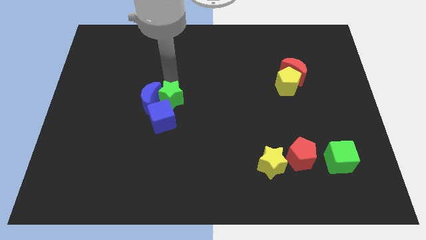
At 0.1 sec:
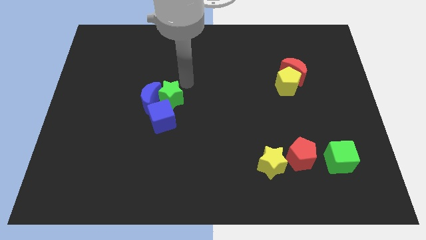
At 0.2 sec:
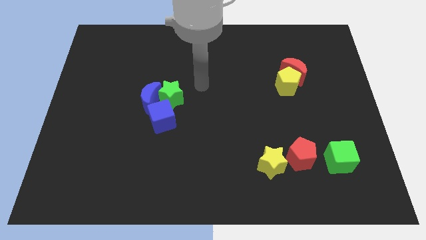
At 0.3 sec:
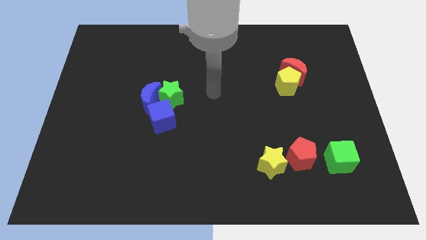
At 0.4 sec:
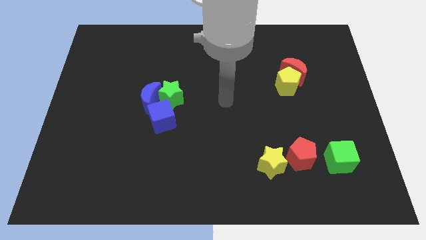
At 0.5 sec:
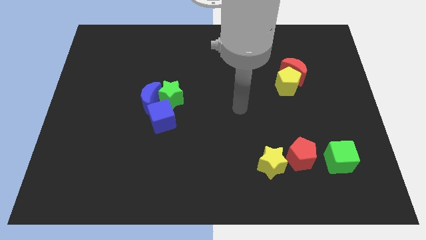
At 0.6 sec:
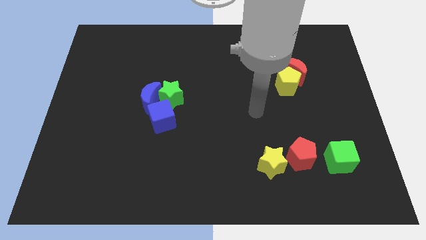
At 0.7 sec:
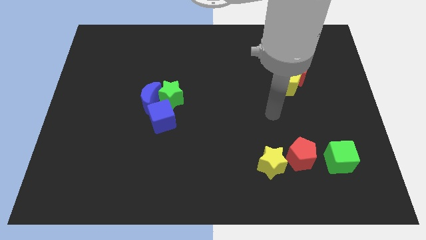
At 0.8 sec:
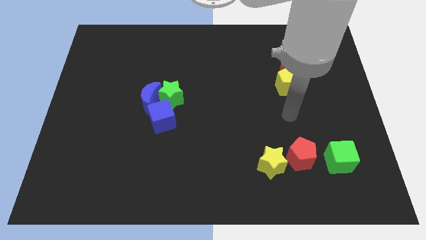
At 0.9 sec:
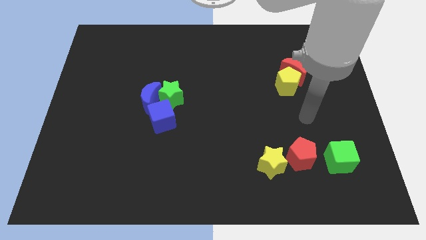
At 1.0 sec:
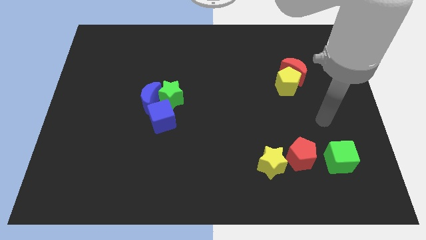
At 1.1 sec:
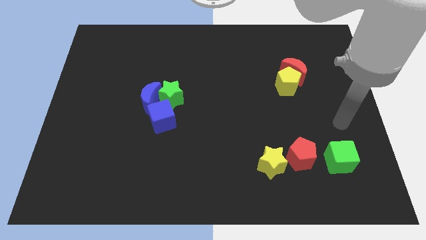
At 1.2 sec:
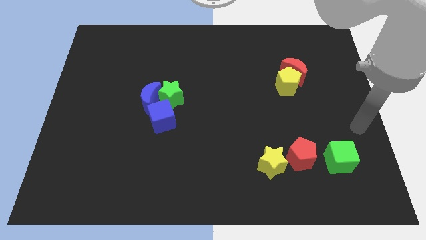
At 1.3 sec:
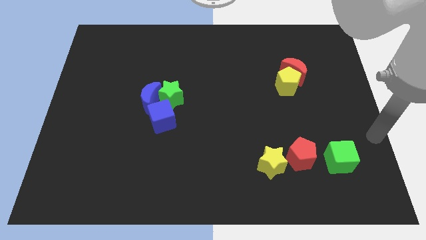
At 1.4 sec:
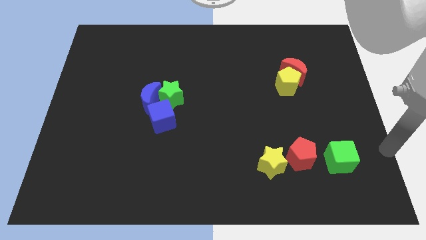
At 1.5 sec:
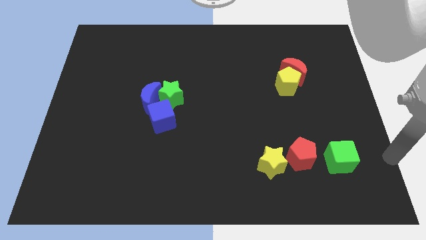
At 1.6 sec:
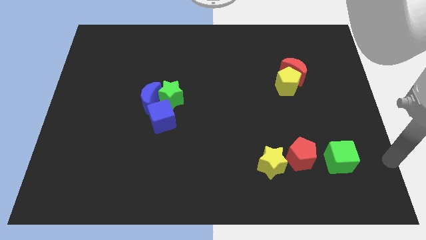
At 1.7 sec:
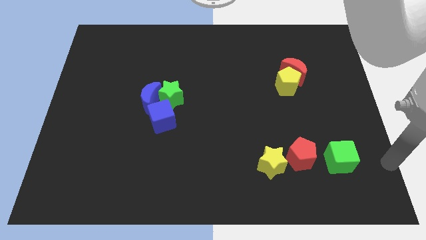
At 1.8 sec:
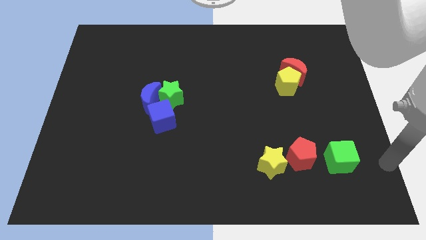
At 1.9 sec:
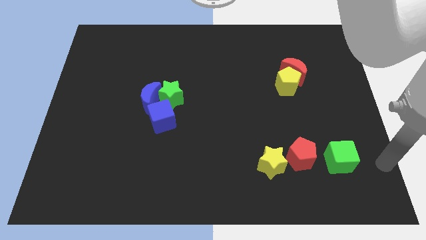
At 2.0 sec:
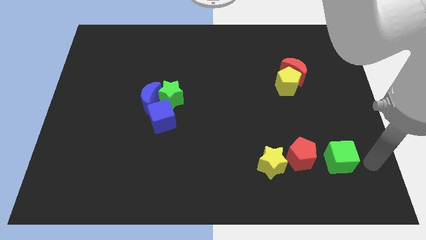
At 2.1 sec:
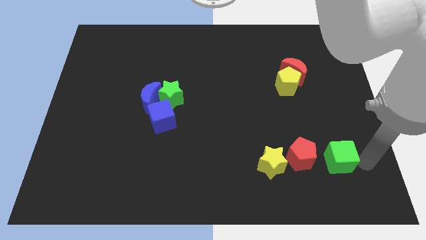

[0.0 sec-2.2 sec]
move arm to the right of the green cube

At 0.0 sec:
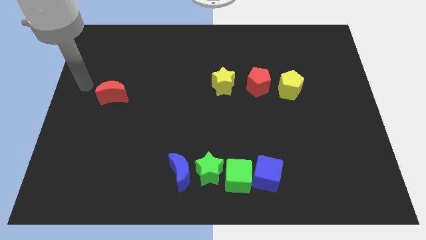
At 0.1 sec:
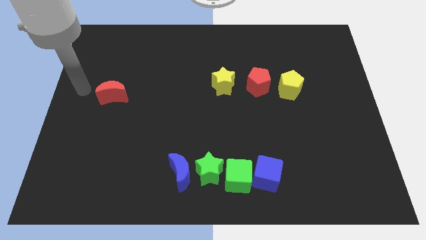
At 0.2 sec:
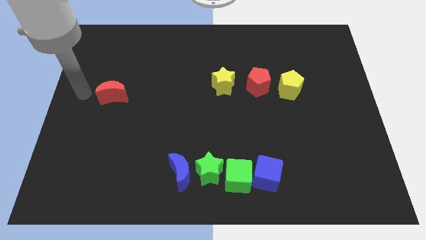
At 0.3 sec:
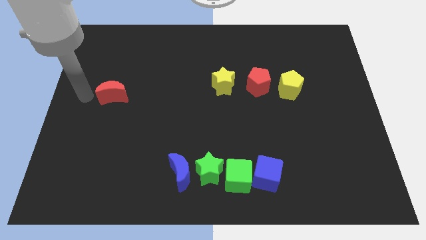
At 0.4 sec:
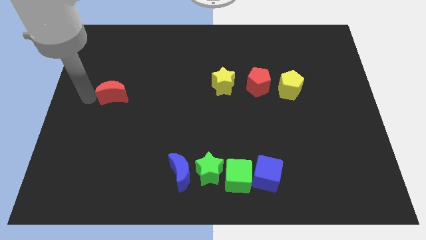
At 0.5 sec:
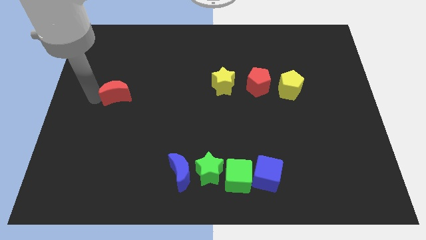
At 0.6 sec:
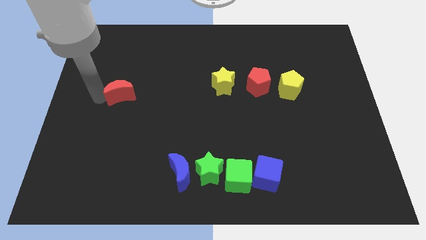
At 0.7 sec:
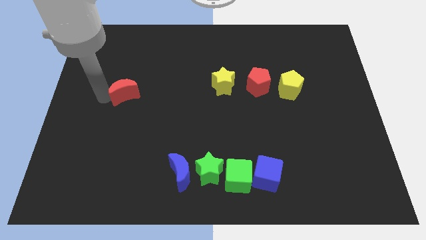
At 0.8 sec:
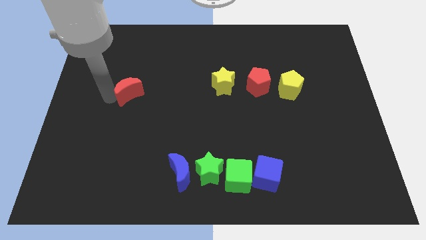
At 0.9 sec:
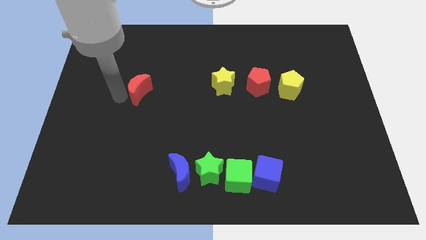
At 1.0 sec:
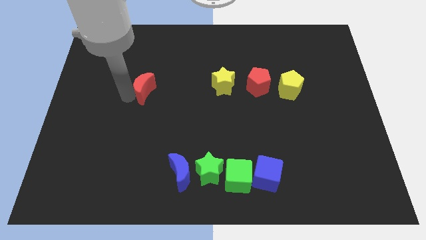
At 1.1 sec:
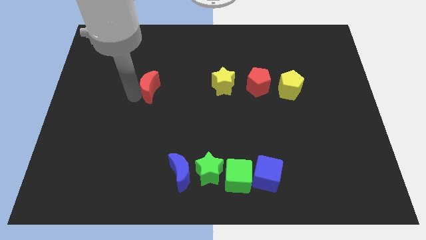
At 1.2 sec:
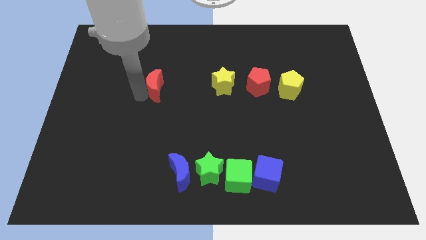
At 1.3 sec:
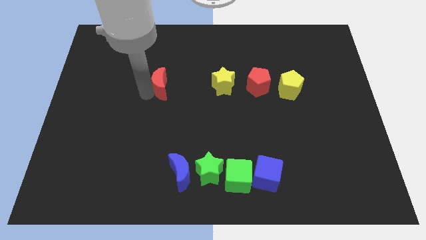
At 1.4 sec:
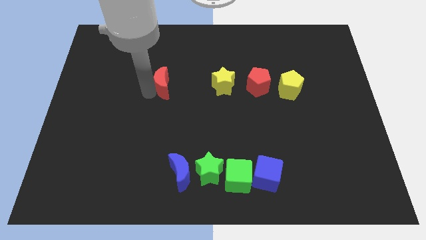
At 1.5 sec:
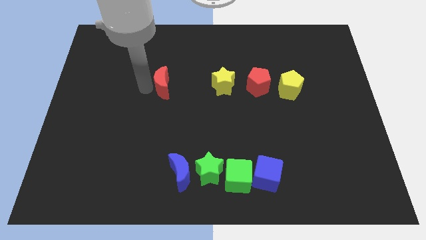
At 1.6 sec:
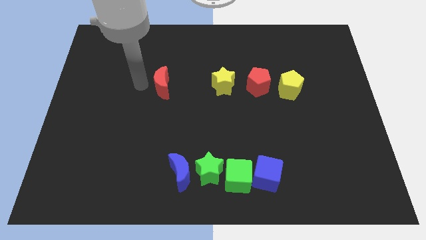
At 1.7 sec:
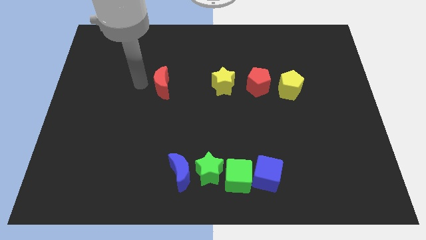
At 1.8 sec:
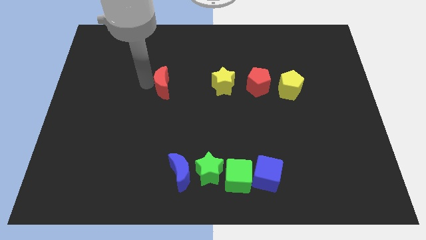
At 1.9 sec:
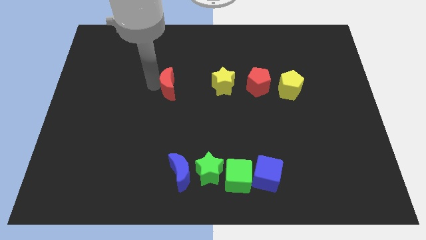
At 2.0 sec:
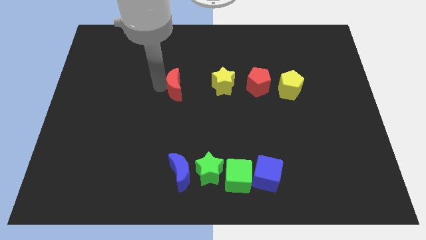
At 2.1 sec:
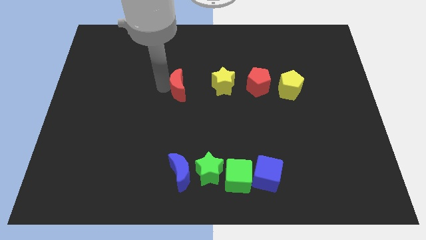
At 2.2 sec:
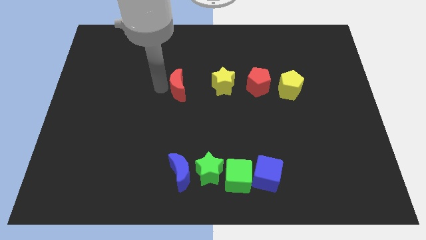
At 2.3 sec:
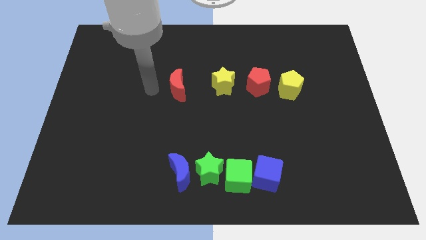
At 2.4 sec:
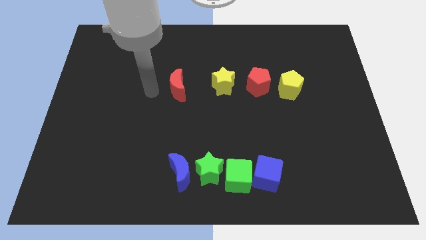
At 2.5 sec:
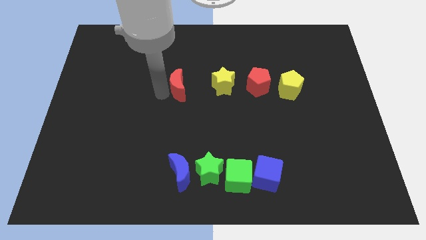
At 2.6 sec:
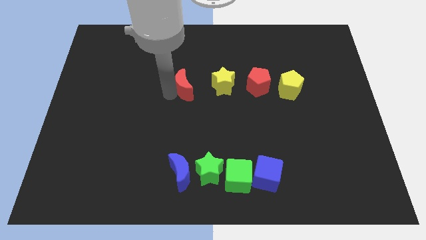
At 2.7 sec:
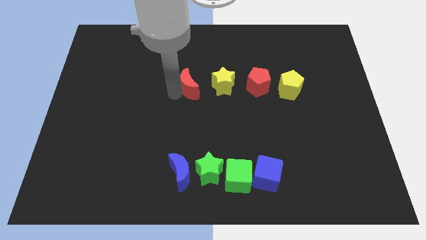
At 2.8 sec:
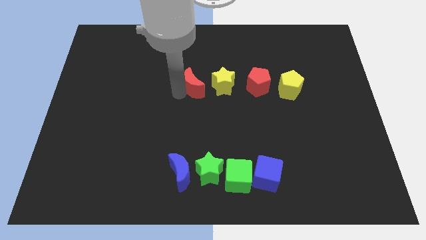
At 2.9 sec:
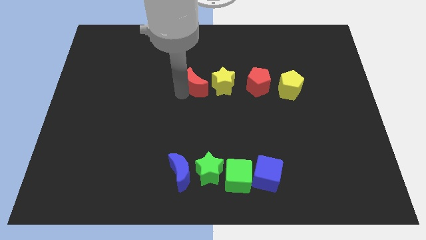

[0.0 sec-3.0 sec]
move the red moon to the left of yellow star

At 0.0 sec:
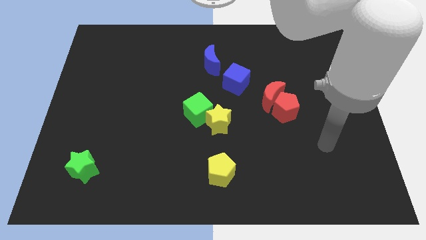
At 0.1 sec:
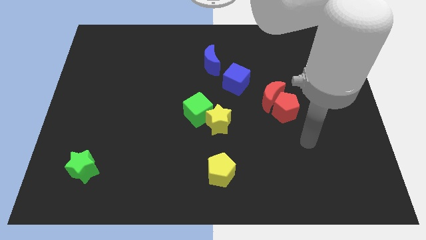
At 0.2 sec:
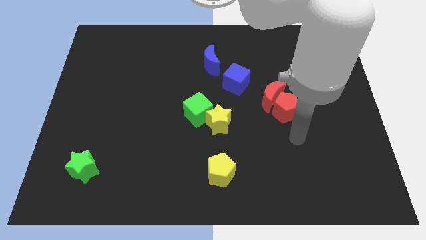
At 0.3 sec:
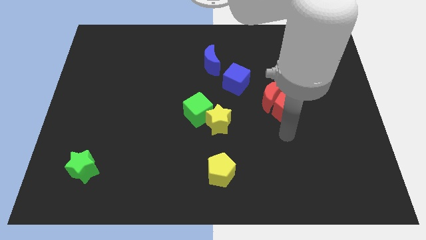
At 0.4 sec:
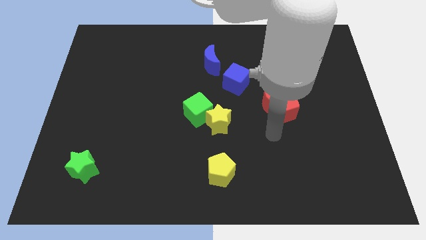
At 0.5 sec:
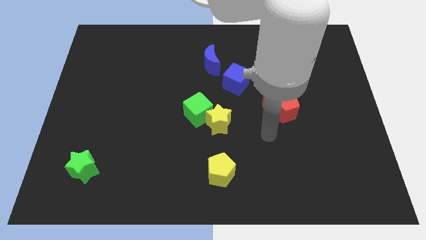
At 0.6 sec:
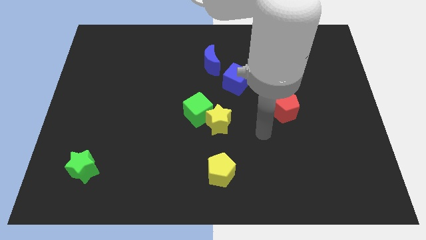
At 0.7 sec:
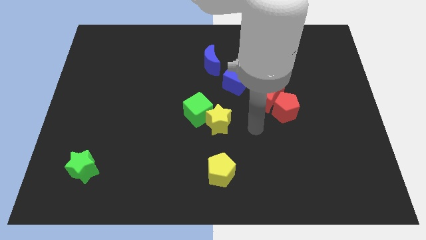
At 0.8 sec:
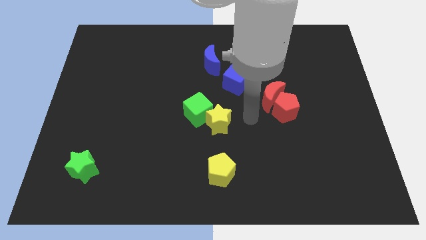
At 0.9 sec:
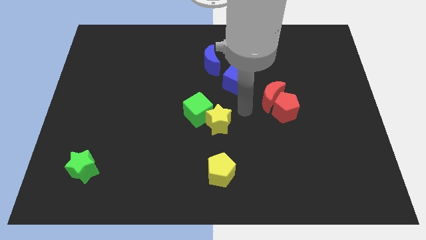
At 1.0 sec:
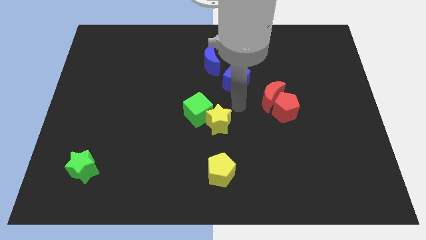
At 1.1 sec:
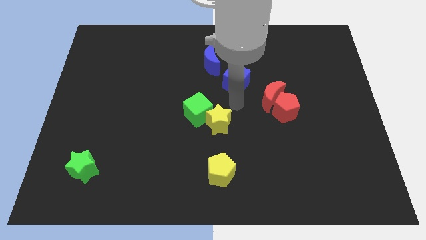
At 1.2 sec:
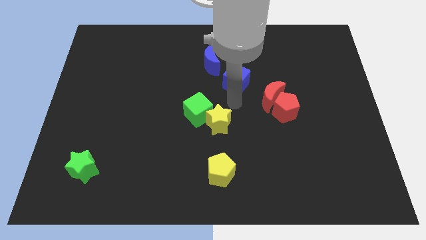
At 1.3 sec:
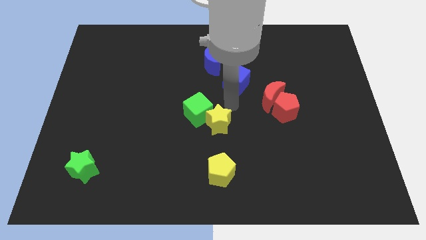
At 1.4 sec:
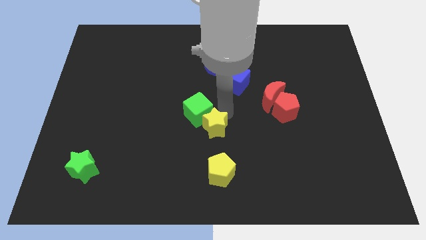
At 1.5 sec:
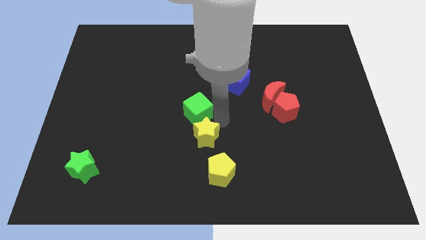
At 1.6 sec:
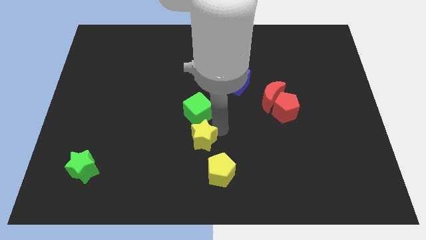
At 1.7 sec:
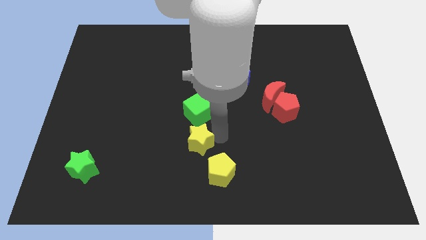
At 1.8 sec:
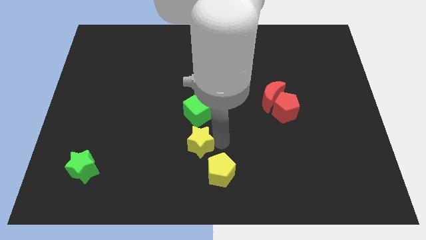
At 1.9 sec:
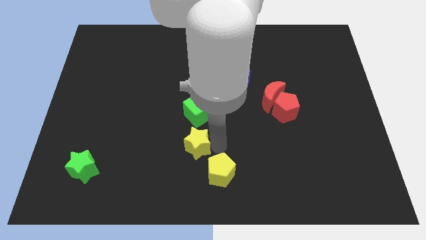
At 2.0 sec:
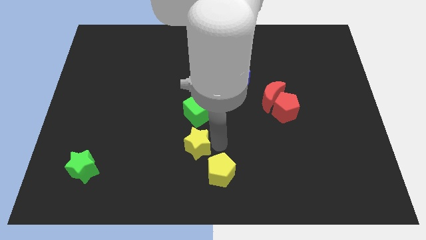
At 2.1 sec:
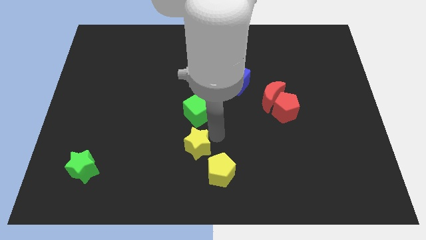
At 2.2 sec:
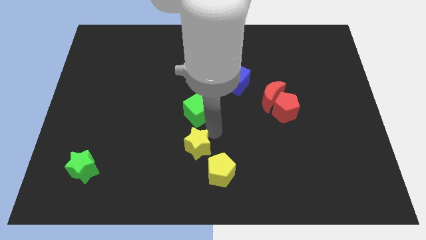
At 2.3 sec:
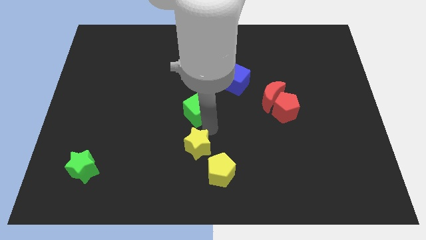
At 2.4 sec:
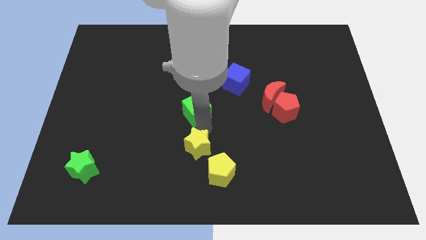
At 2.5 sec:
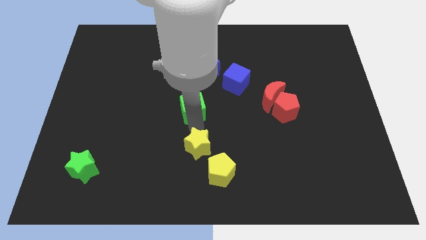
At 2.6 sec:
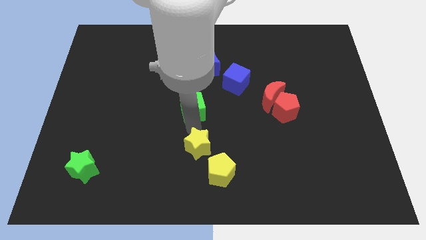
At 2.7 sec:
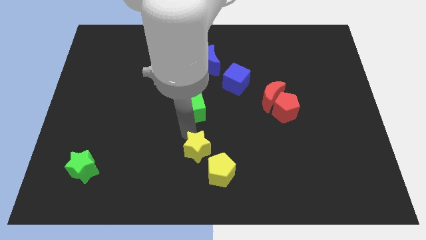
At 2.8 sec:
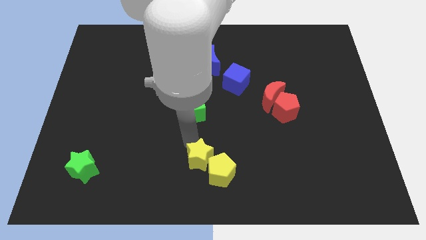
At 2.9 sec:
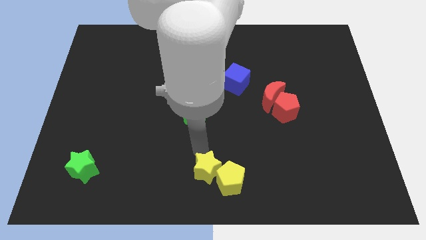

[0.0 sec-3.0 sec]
place the yellow star horizontally right to the green star

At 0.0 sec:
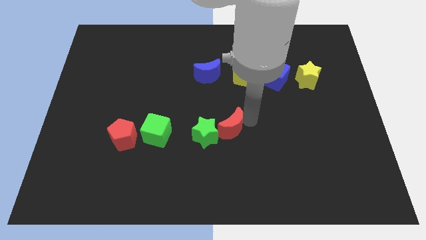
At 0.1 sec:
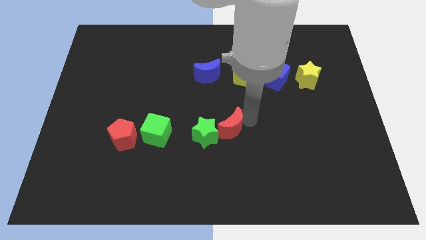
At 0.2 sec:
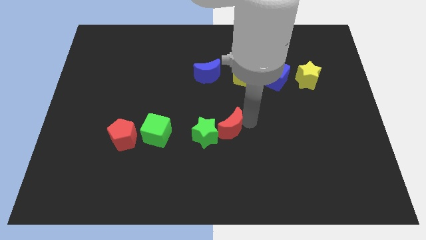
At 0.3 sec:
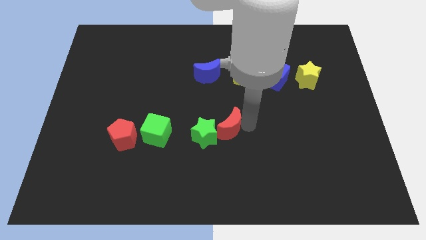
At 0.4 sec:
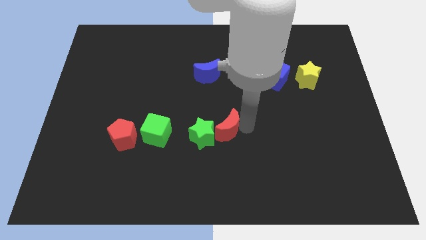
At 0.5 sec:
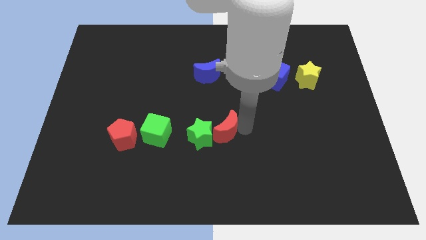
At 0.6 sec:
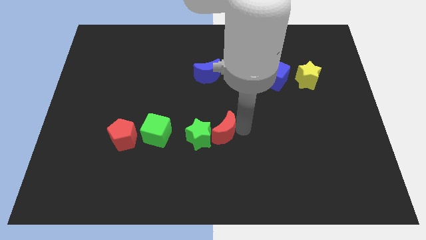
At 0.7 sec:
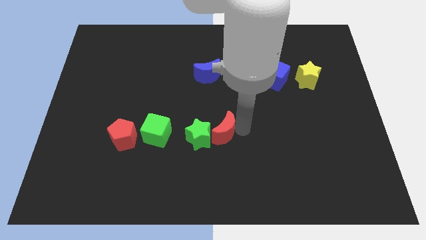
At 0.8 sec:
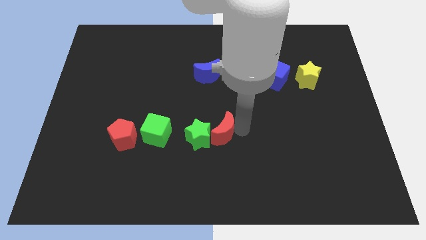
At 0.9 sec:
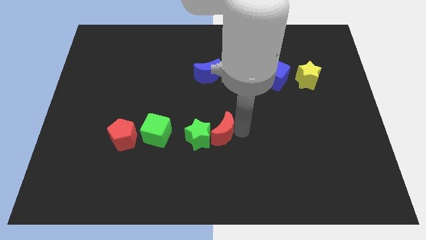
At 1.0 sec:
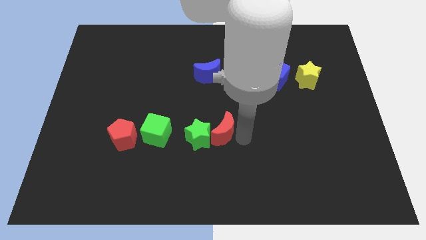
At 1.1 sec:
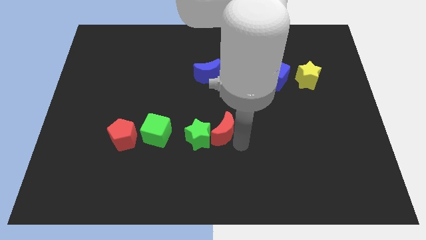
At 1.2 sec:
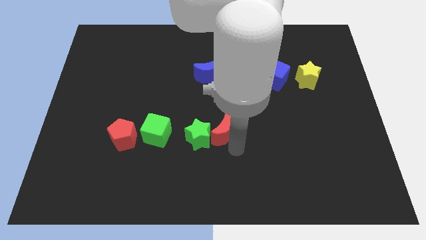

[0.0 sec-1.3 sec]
move red moon and green star slightly towards the green cube
